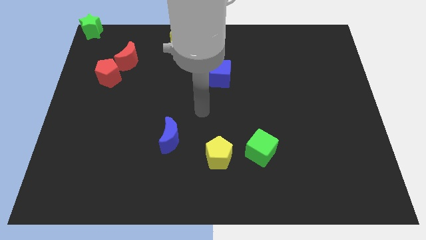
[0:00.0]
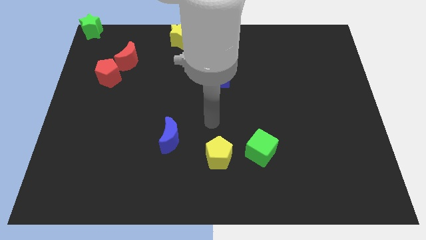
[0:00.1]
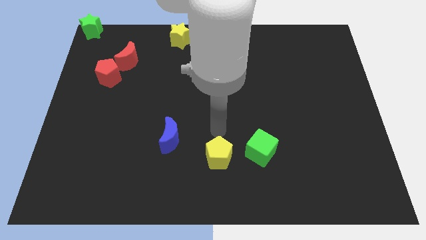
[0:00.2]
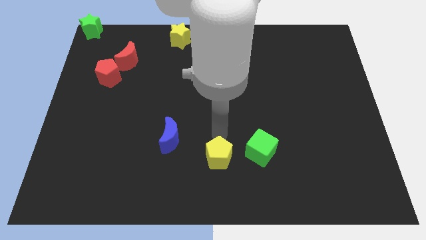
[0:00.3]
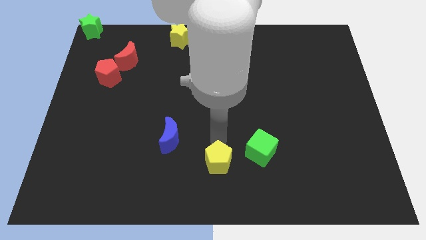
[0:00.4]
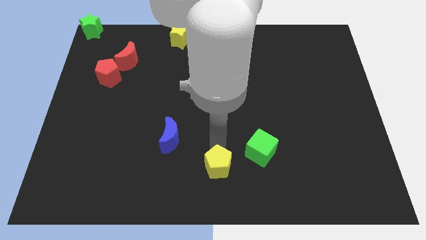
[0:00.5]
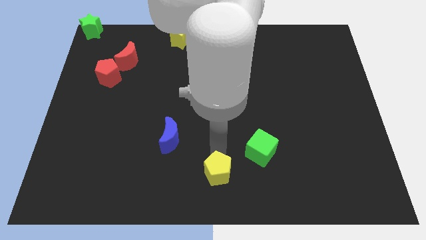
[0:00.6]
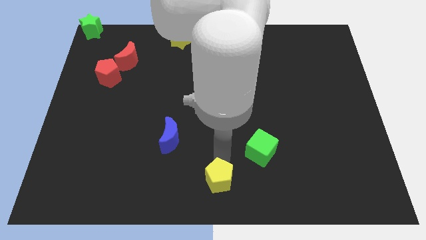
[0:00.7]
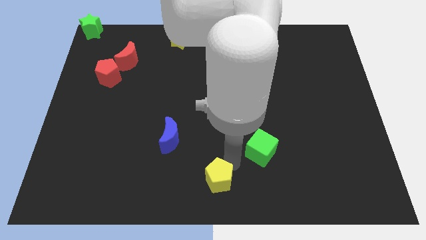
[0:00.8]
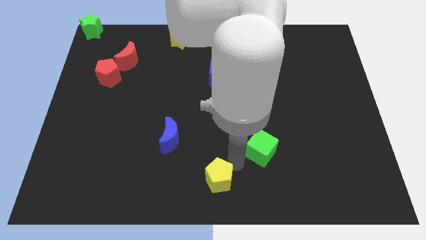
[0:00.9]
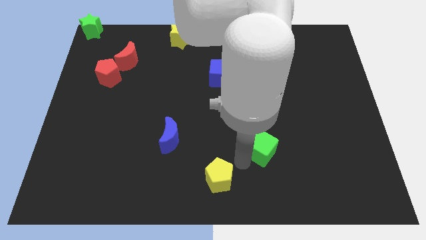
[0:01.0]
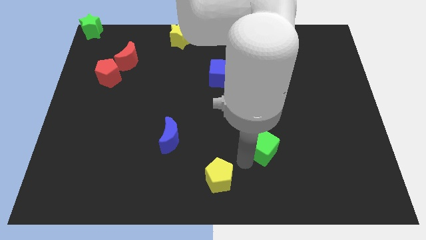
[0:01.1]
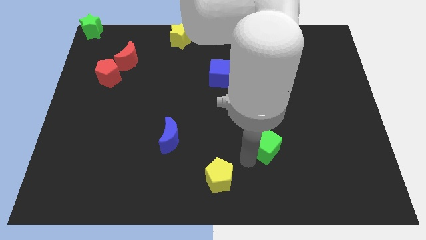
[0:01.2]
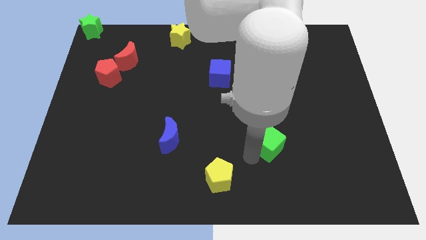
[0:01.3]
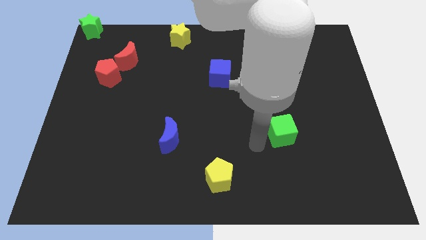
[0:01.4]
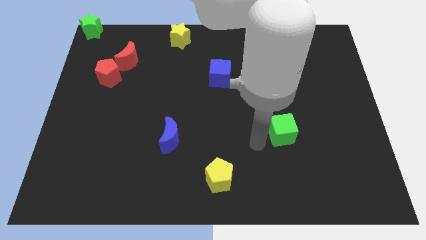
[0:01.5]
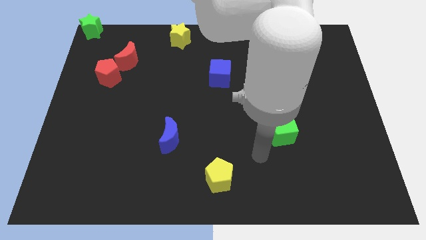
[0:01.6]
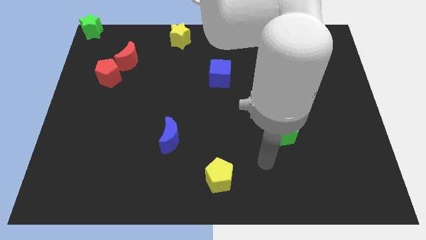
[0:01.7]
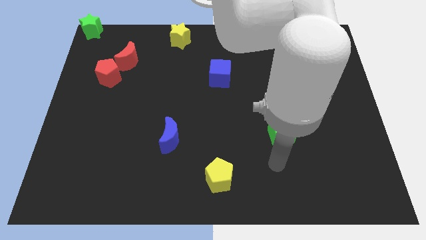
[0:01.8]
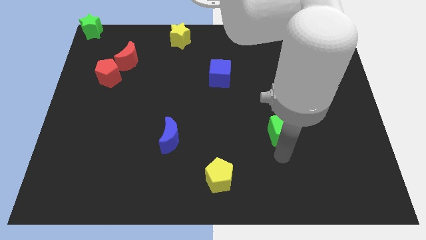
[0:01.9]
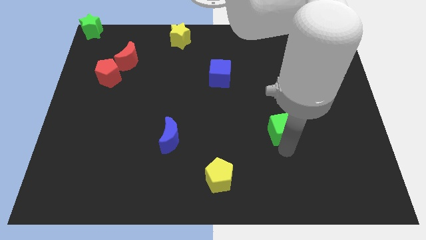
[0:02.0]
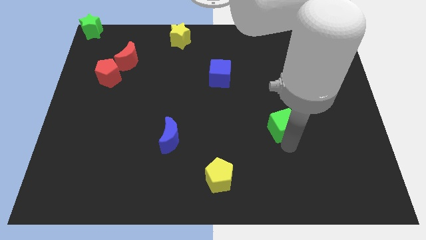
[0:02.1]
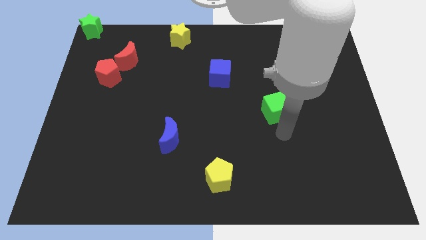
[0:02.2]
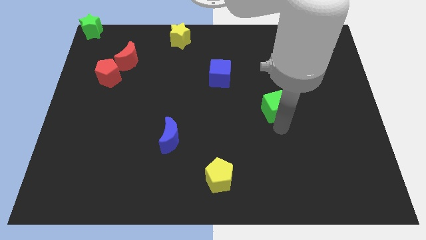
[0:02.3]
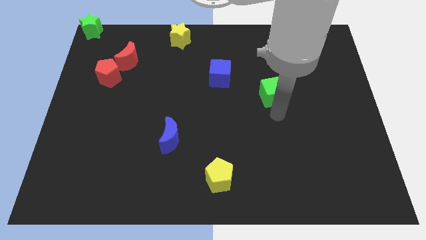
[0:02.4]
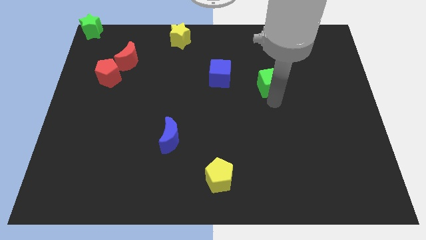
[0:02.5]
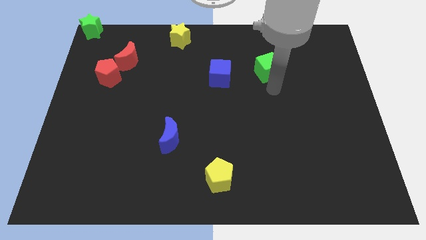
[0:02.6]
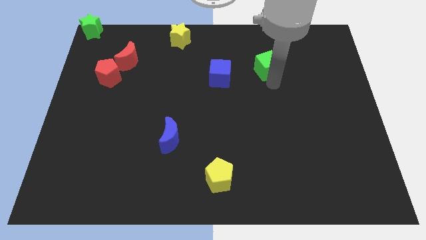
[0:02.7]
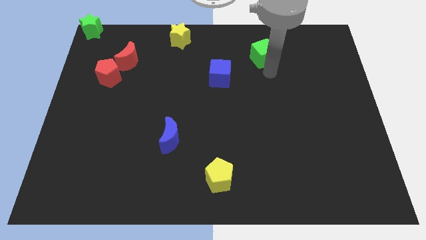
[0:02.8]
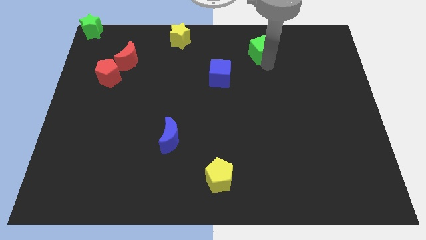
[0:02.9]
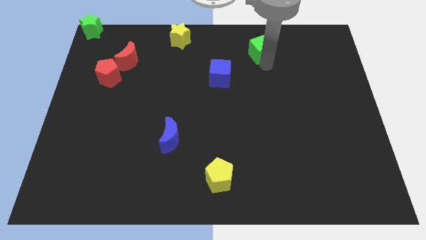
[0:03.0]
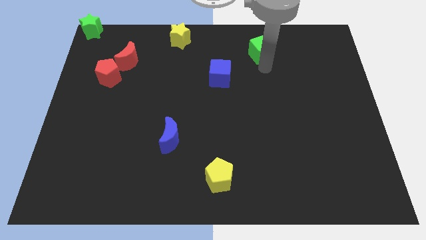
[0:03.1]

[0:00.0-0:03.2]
place the green cube diagonally at the top right of blue cube

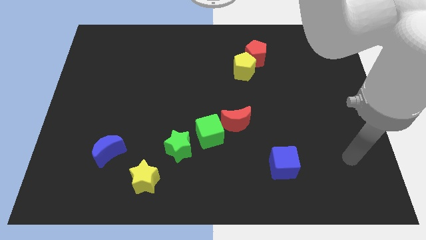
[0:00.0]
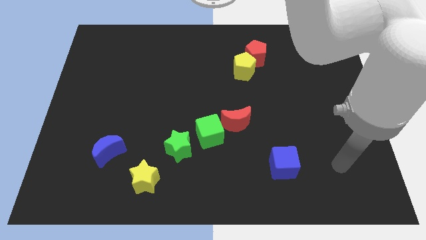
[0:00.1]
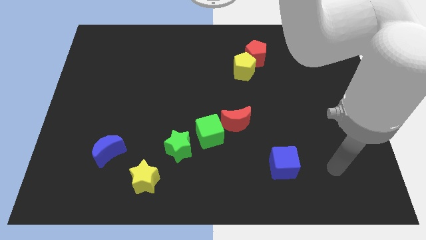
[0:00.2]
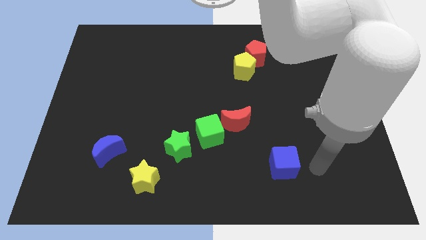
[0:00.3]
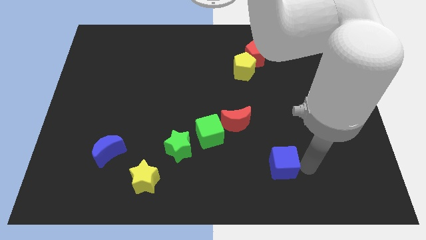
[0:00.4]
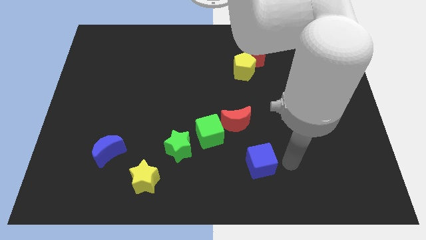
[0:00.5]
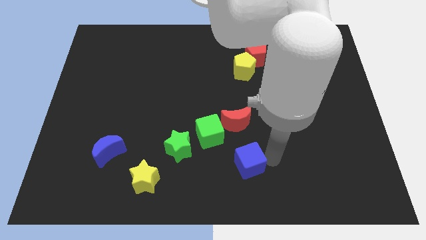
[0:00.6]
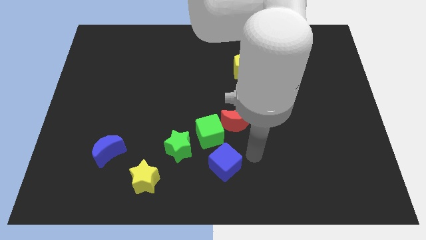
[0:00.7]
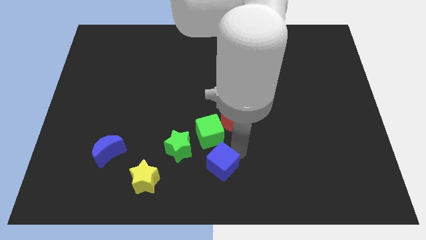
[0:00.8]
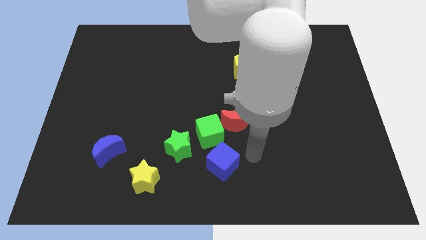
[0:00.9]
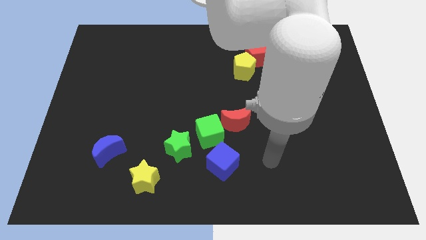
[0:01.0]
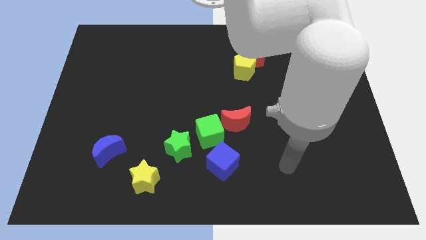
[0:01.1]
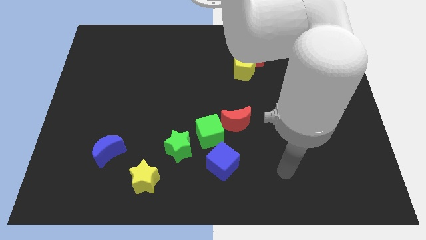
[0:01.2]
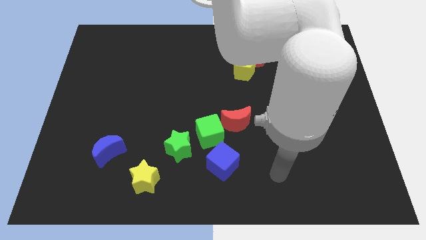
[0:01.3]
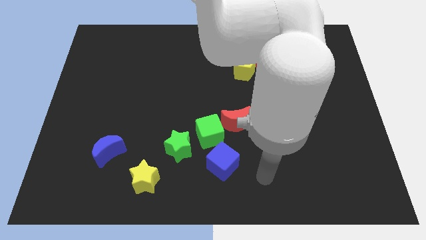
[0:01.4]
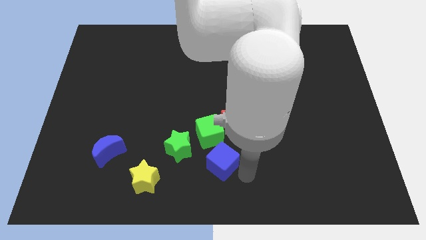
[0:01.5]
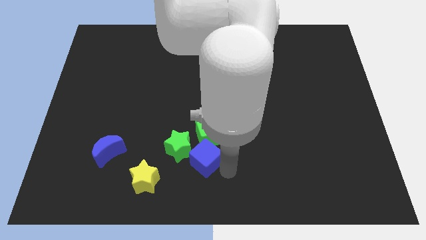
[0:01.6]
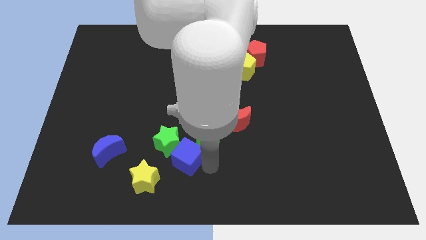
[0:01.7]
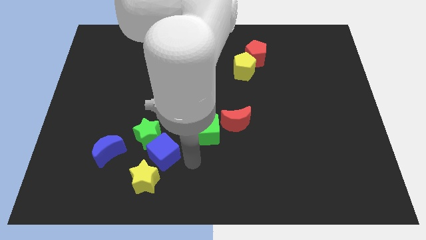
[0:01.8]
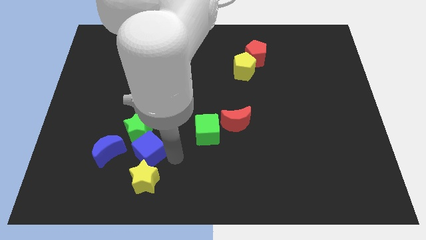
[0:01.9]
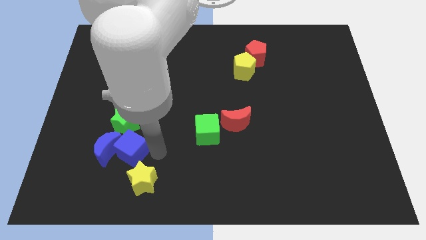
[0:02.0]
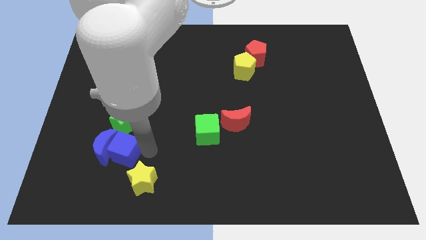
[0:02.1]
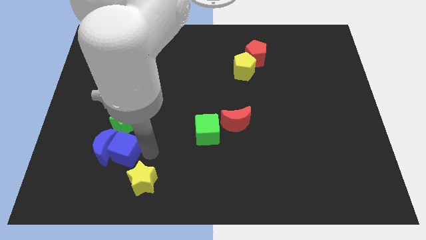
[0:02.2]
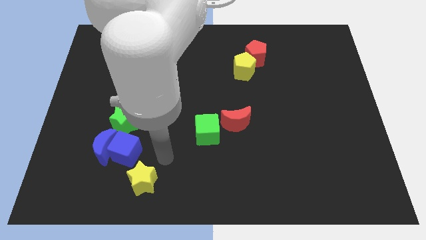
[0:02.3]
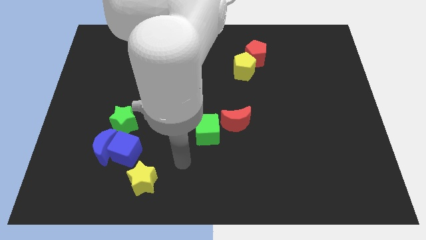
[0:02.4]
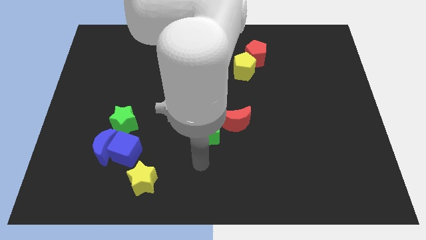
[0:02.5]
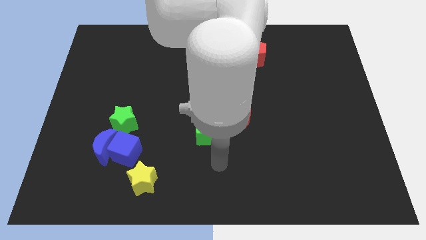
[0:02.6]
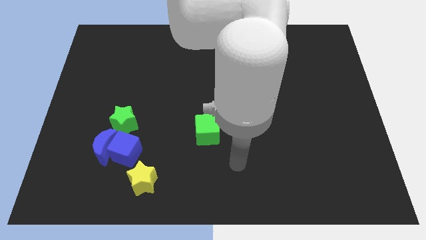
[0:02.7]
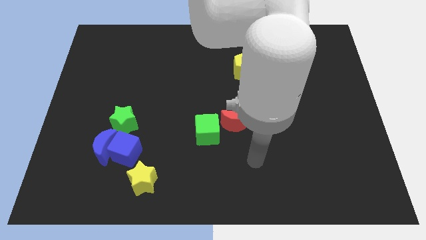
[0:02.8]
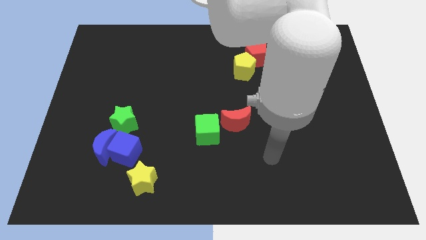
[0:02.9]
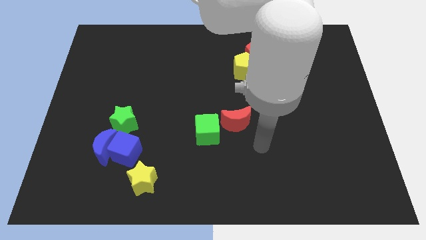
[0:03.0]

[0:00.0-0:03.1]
slide the blue cube into the blue moon

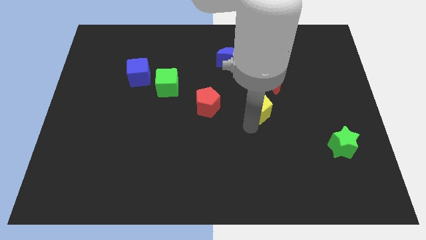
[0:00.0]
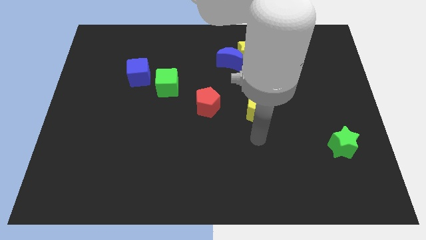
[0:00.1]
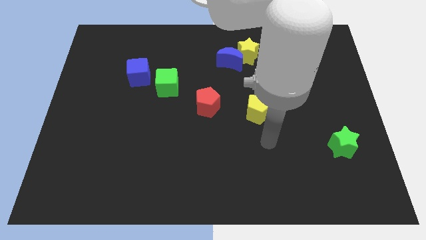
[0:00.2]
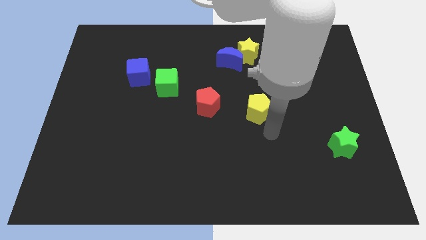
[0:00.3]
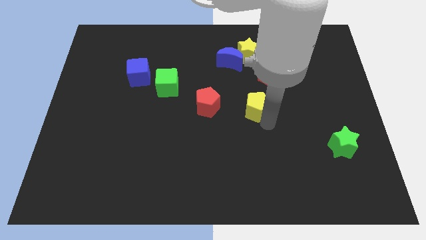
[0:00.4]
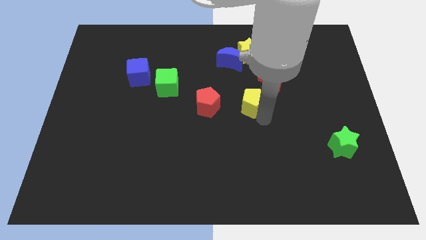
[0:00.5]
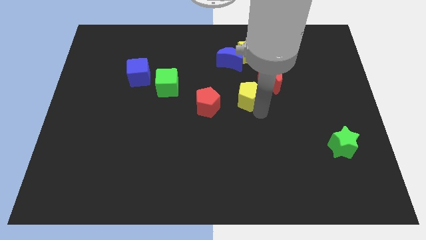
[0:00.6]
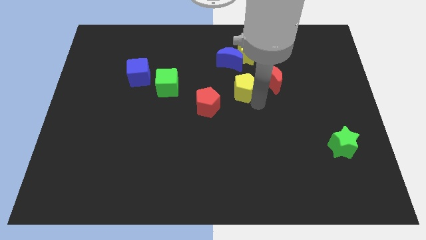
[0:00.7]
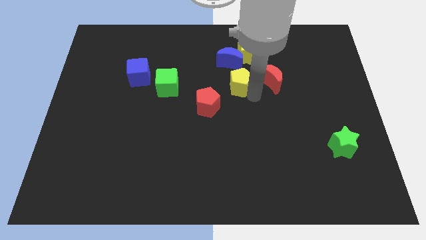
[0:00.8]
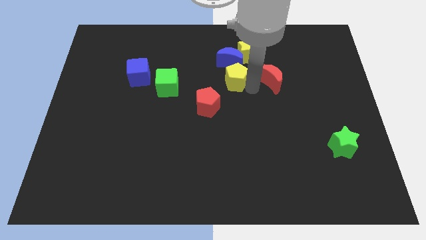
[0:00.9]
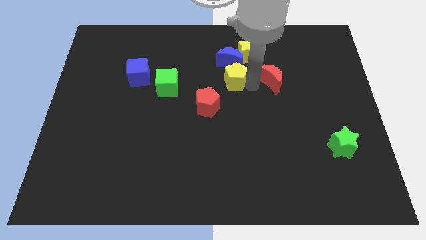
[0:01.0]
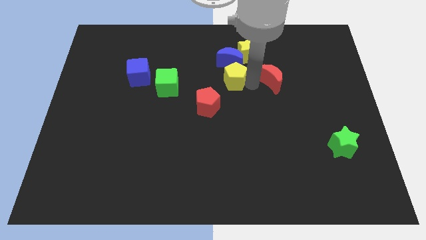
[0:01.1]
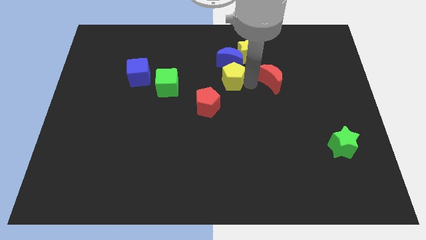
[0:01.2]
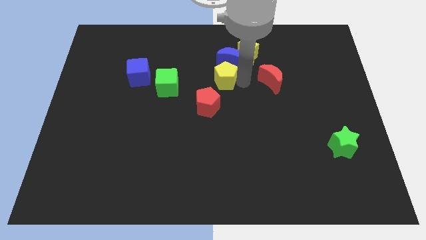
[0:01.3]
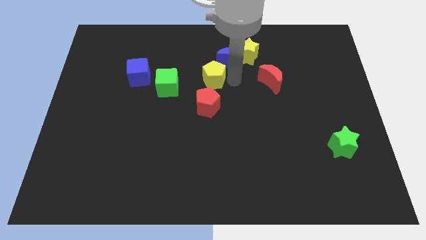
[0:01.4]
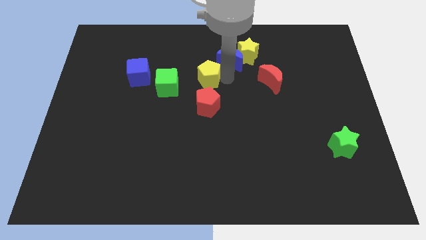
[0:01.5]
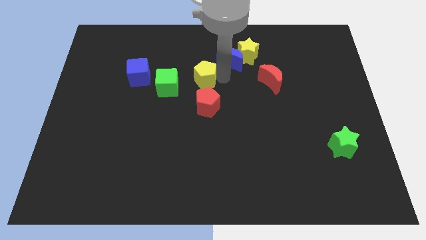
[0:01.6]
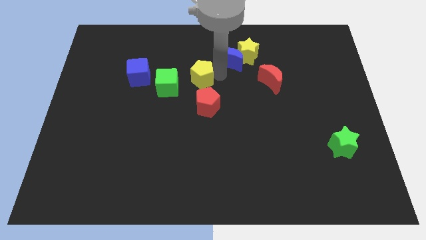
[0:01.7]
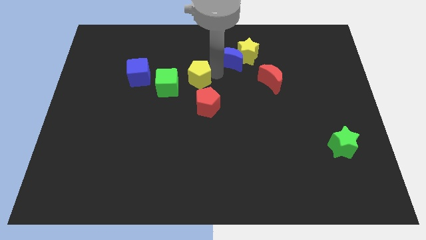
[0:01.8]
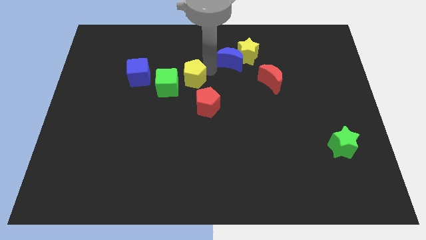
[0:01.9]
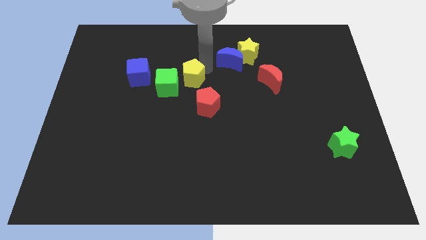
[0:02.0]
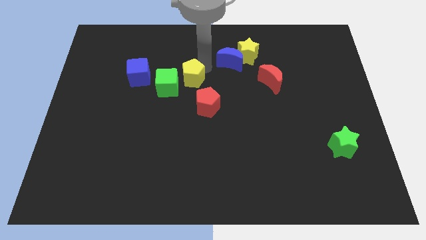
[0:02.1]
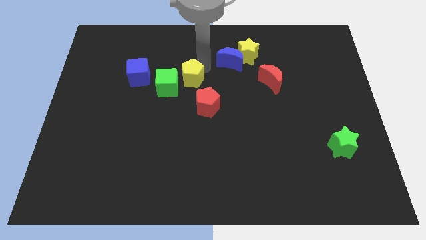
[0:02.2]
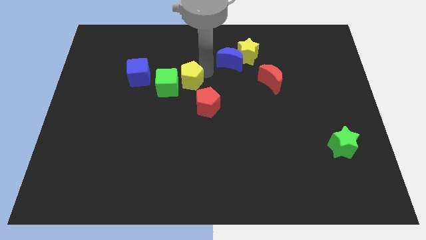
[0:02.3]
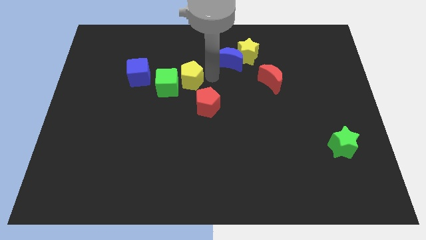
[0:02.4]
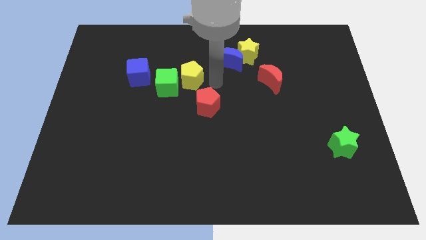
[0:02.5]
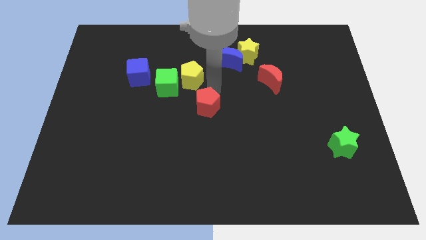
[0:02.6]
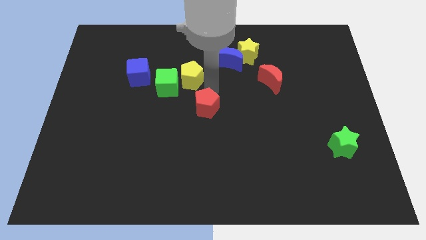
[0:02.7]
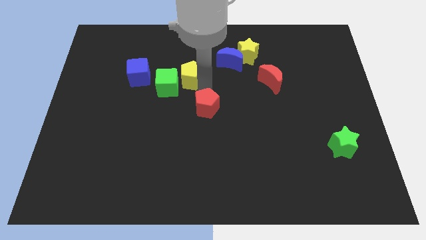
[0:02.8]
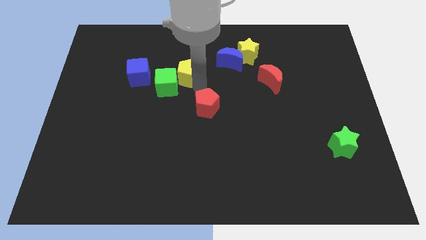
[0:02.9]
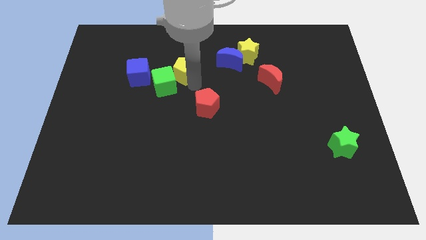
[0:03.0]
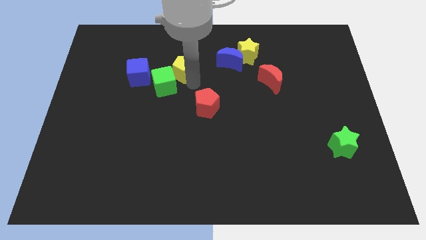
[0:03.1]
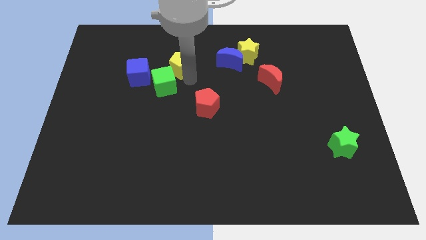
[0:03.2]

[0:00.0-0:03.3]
push the yellow pentagon into blue cube
